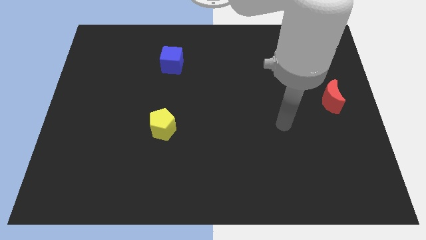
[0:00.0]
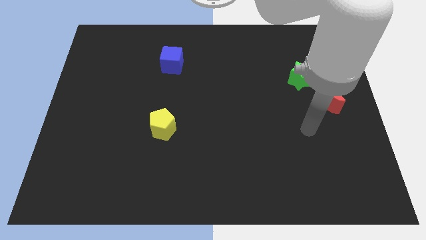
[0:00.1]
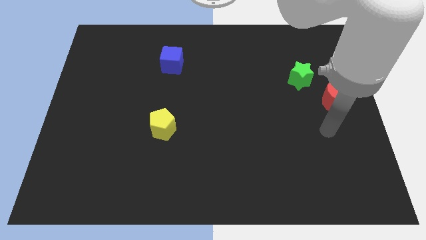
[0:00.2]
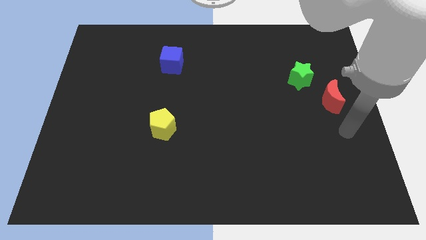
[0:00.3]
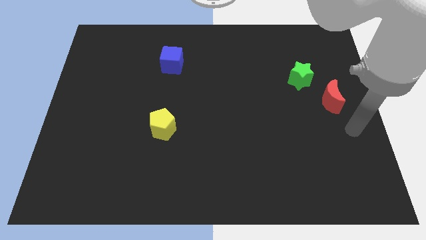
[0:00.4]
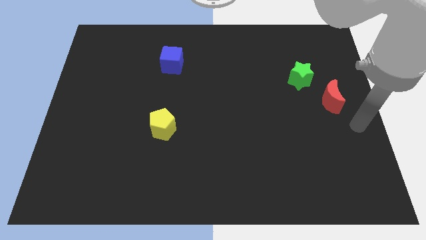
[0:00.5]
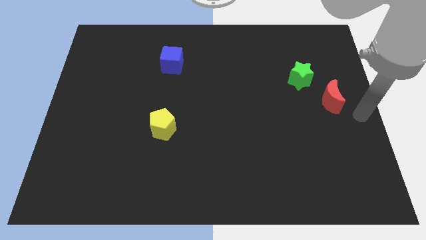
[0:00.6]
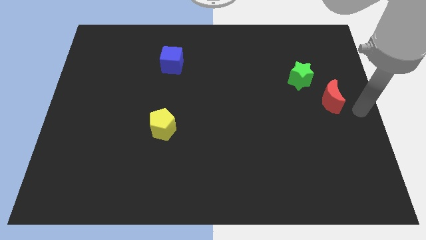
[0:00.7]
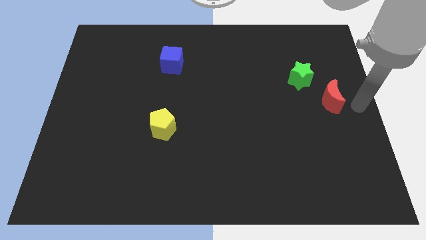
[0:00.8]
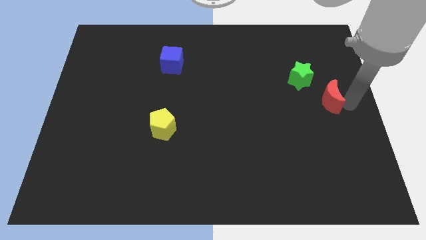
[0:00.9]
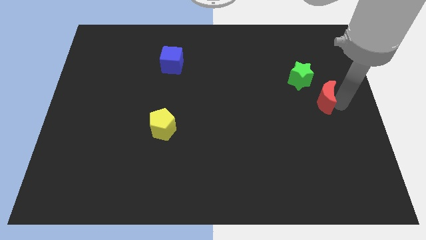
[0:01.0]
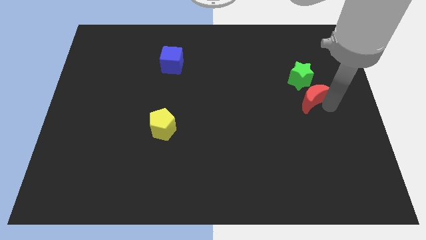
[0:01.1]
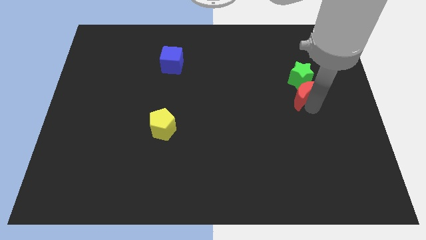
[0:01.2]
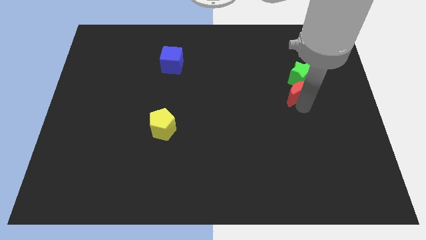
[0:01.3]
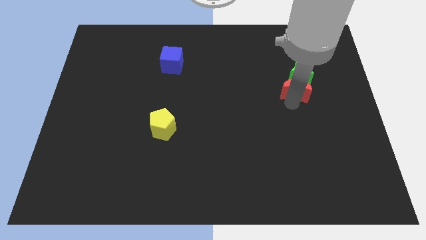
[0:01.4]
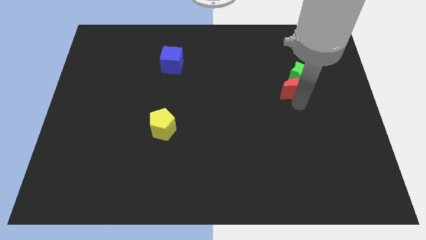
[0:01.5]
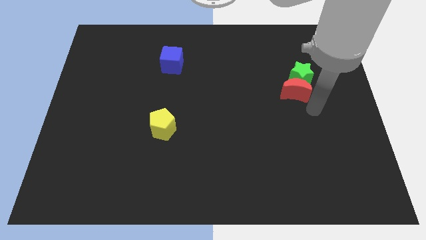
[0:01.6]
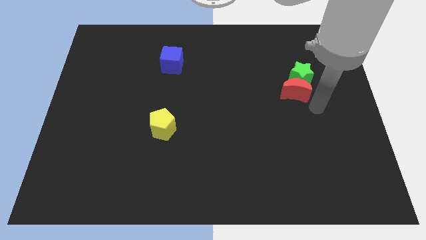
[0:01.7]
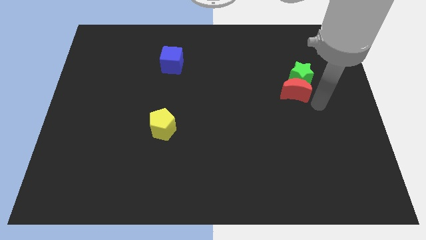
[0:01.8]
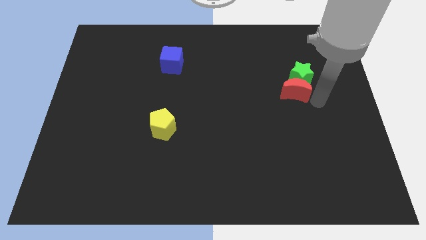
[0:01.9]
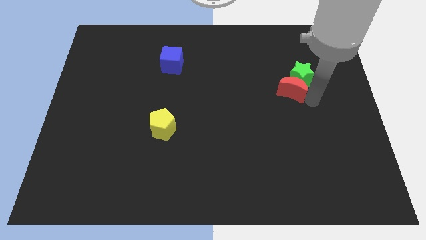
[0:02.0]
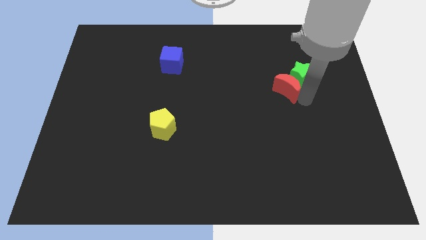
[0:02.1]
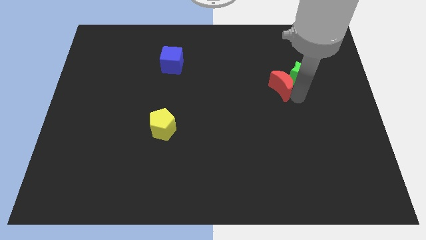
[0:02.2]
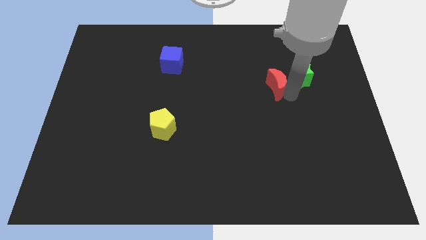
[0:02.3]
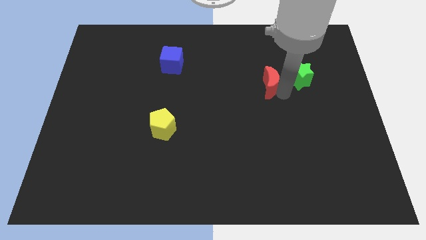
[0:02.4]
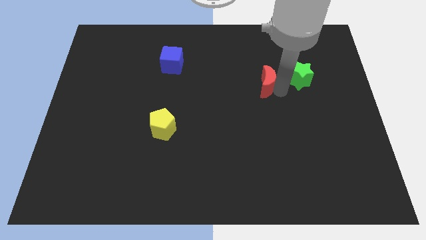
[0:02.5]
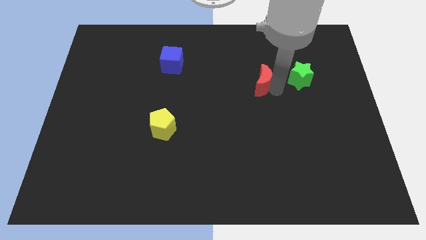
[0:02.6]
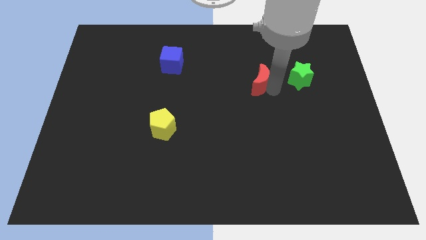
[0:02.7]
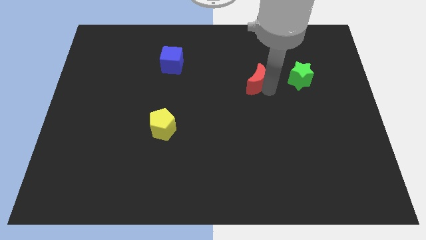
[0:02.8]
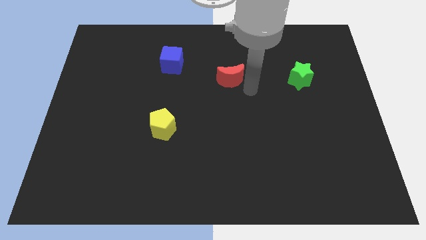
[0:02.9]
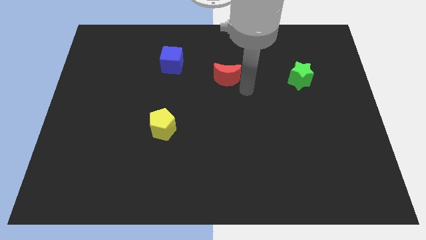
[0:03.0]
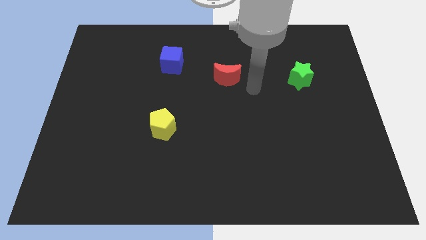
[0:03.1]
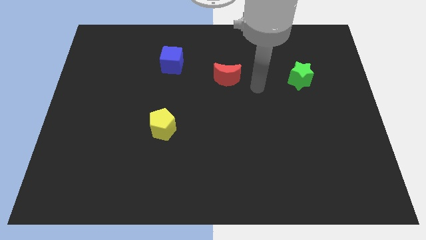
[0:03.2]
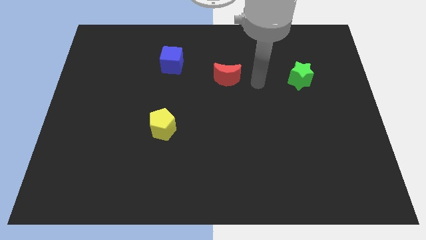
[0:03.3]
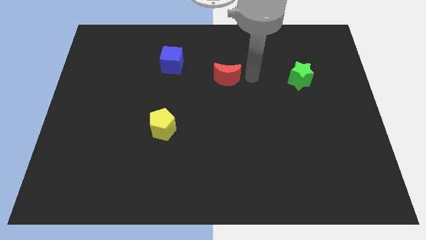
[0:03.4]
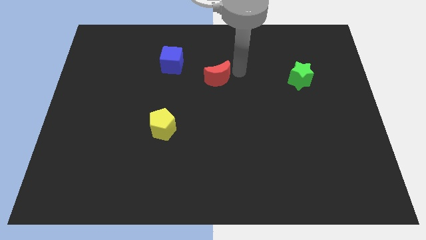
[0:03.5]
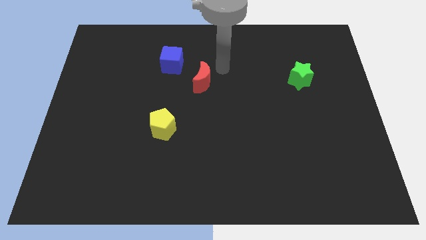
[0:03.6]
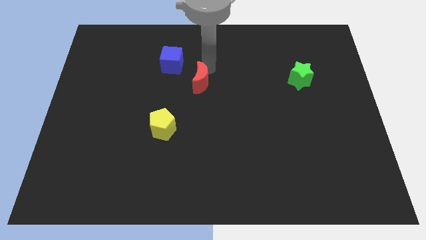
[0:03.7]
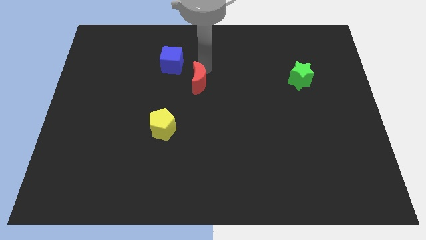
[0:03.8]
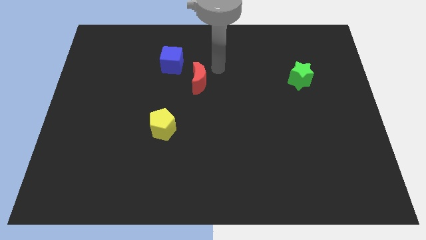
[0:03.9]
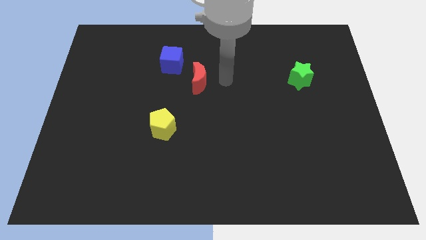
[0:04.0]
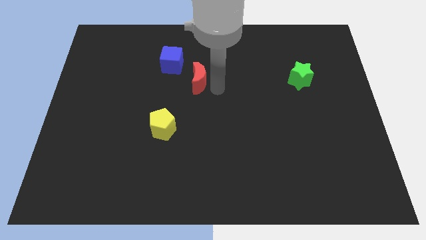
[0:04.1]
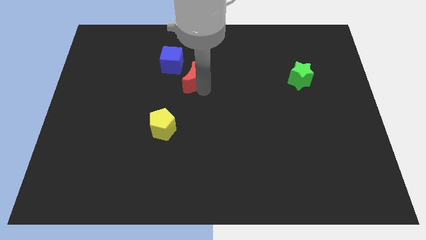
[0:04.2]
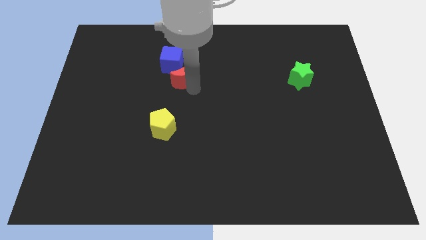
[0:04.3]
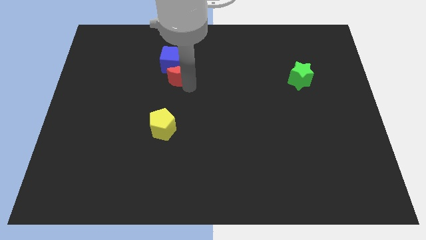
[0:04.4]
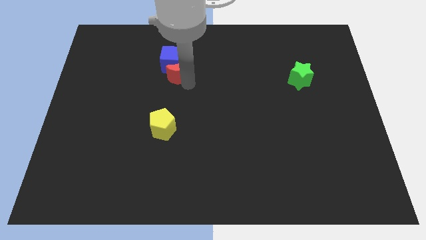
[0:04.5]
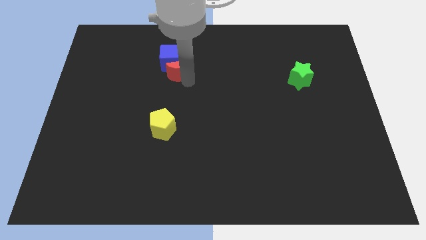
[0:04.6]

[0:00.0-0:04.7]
slide the red block next to the blue cube

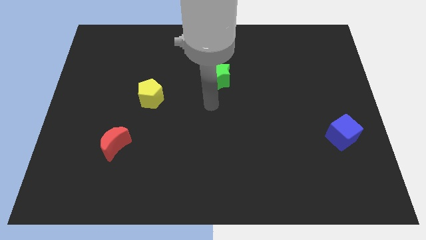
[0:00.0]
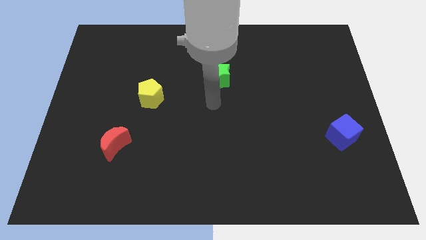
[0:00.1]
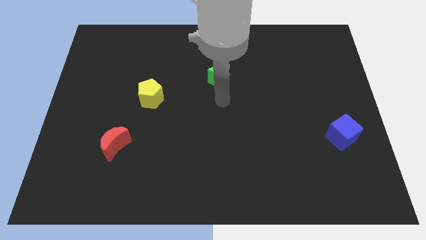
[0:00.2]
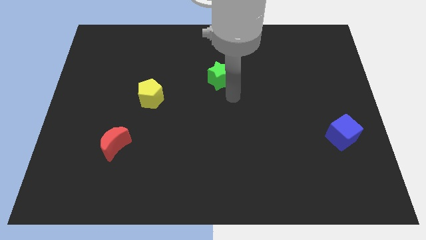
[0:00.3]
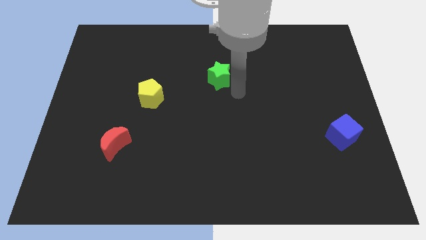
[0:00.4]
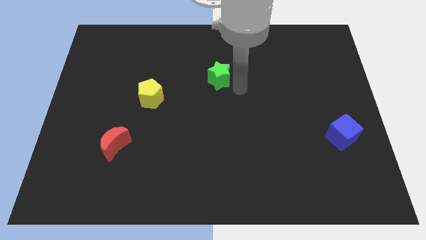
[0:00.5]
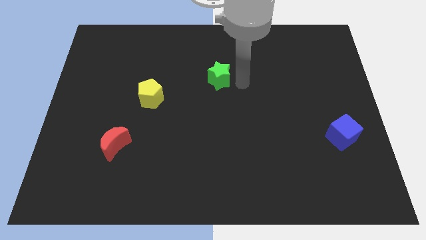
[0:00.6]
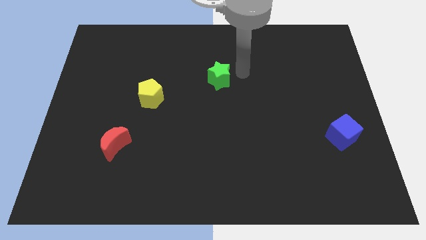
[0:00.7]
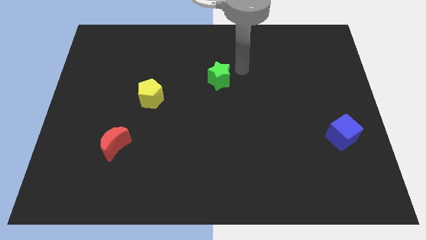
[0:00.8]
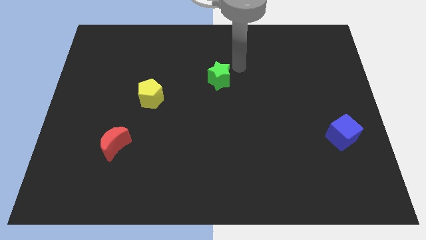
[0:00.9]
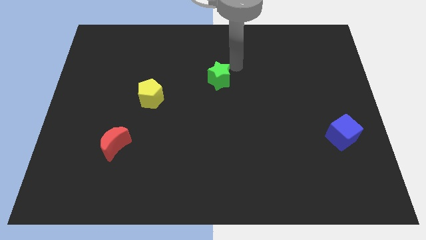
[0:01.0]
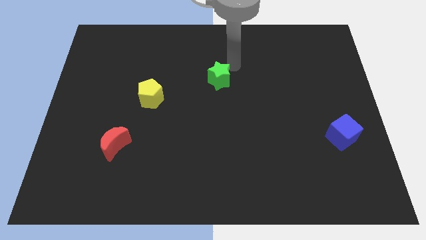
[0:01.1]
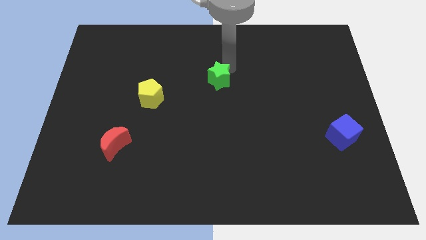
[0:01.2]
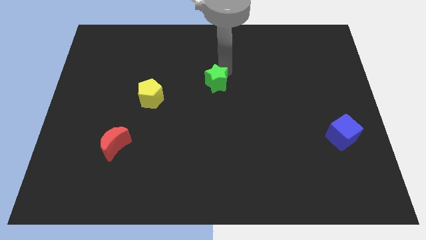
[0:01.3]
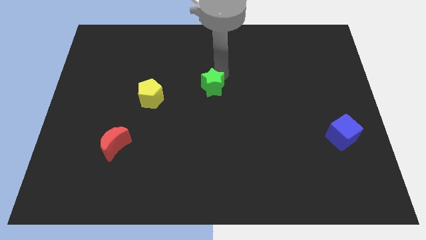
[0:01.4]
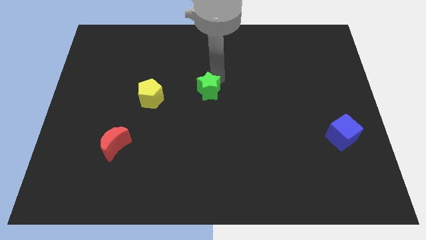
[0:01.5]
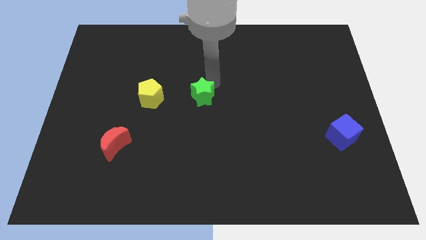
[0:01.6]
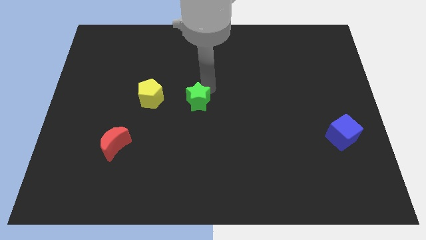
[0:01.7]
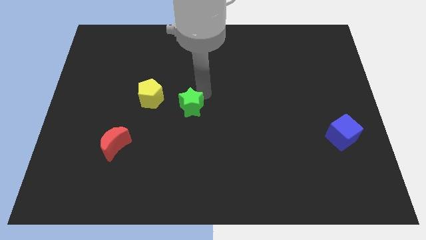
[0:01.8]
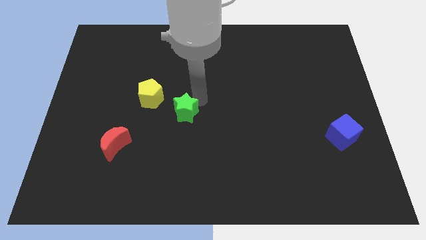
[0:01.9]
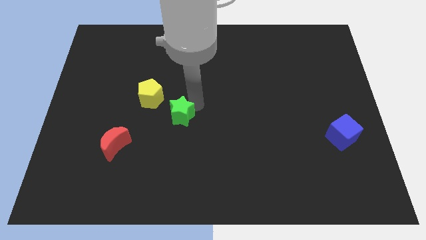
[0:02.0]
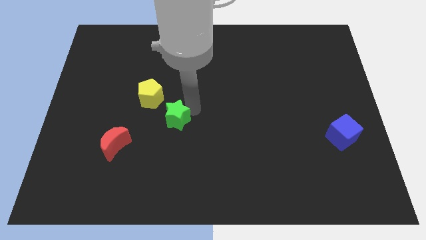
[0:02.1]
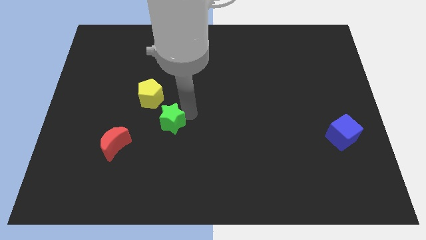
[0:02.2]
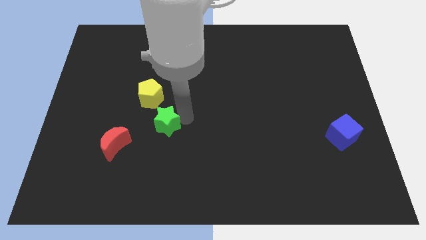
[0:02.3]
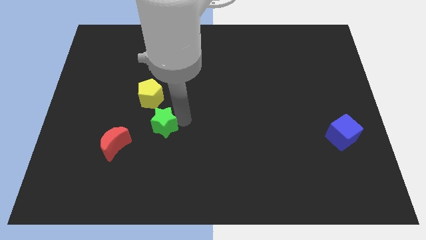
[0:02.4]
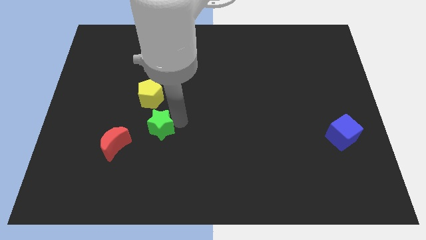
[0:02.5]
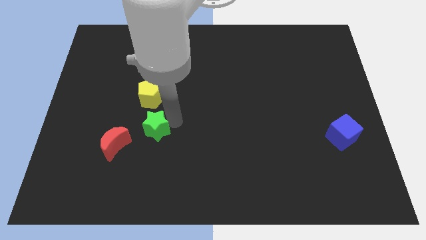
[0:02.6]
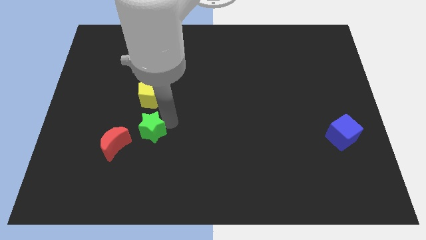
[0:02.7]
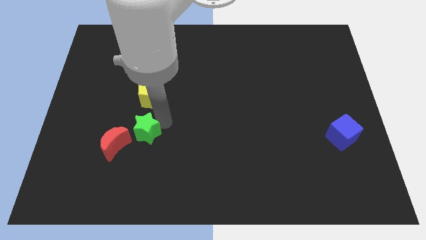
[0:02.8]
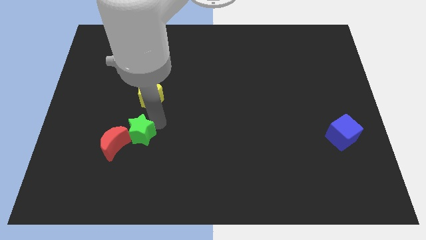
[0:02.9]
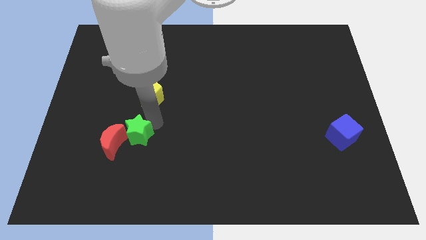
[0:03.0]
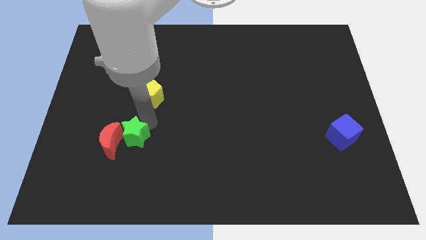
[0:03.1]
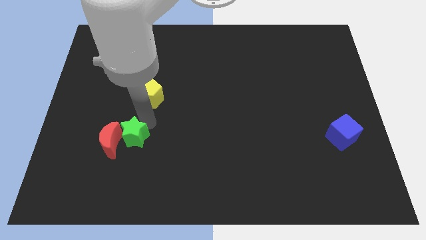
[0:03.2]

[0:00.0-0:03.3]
move the green block to the red block

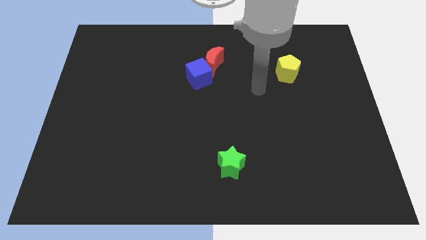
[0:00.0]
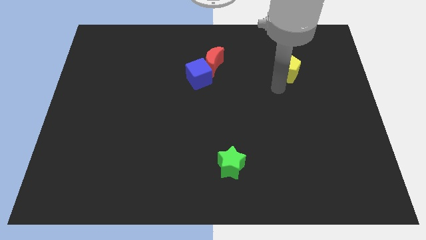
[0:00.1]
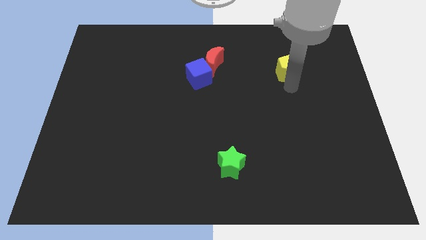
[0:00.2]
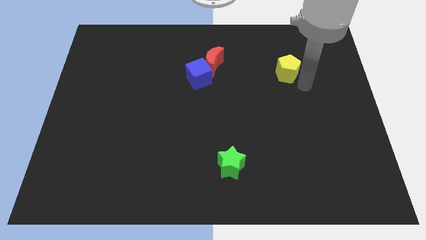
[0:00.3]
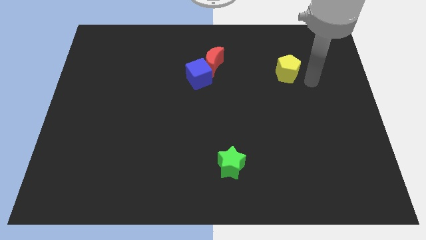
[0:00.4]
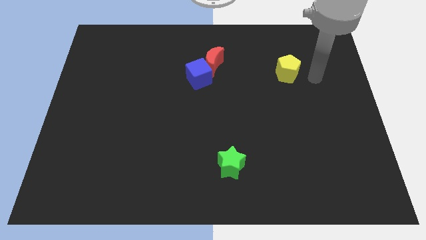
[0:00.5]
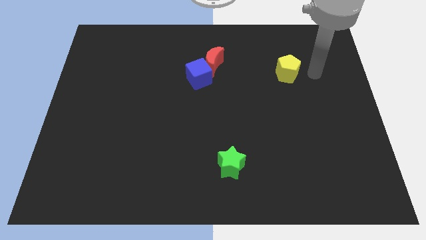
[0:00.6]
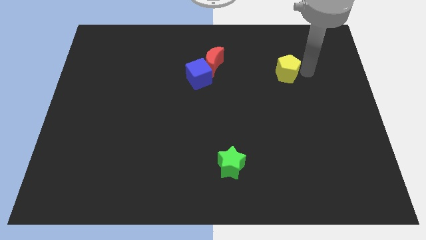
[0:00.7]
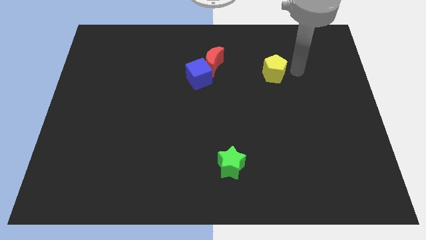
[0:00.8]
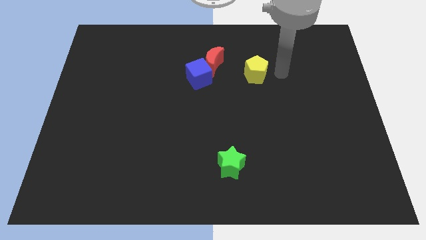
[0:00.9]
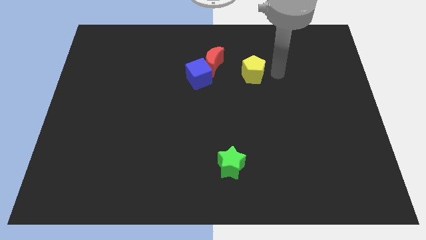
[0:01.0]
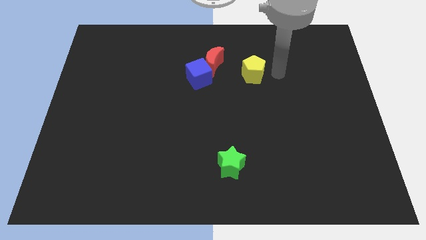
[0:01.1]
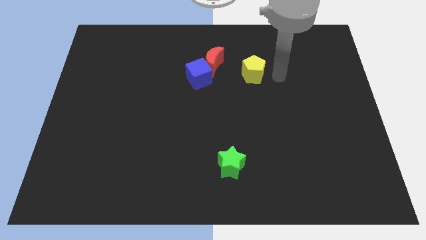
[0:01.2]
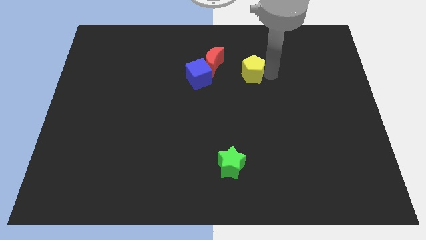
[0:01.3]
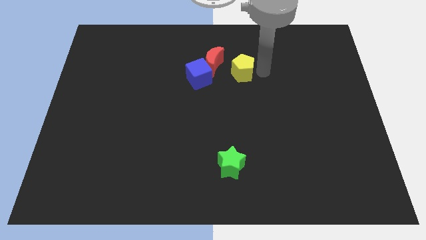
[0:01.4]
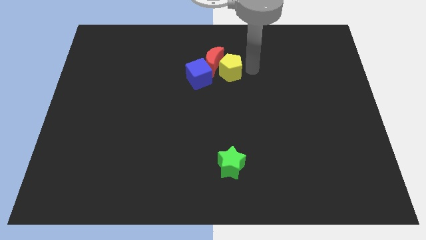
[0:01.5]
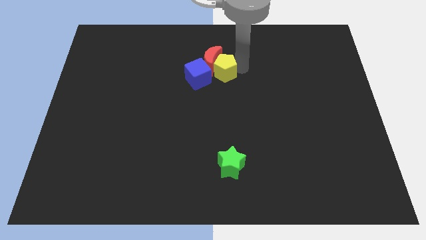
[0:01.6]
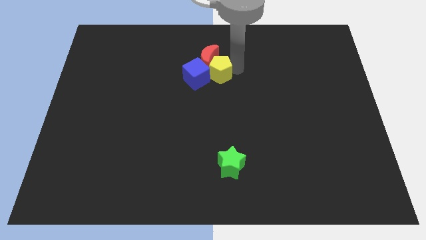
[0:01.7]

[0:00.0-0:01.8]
put the yellow block next to the moon
